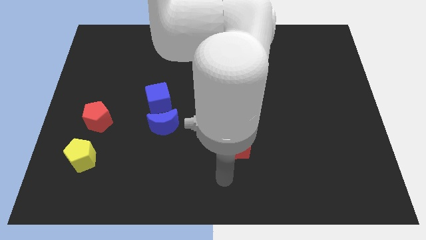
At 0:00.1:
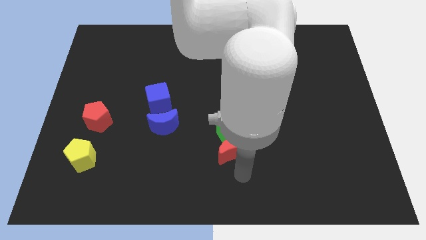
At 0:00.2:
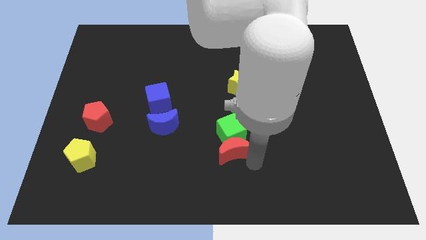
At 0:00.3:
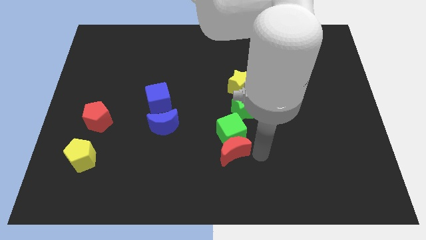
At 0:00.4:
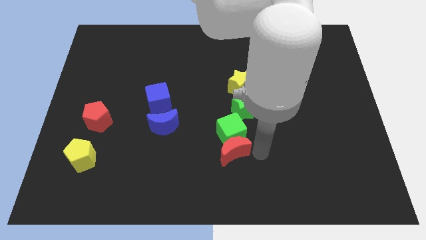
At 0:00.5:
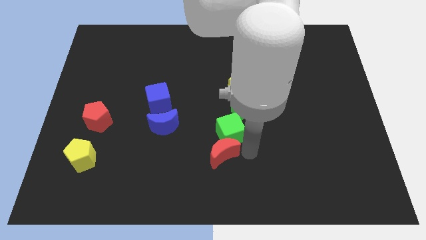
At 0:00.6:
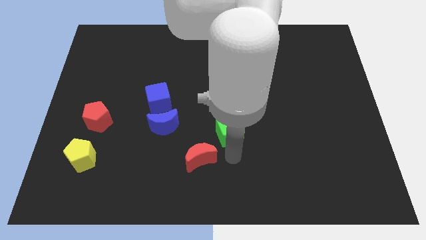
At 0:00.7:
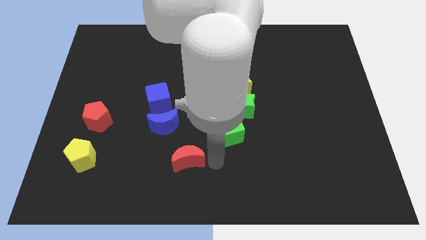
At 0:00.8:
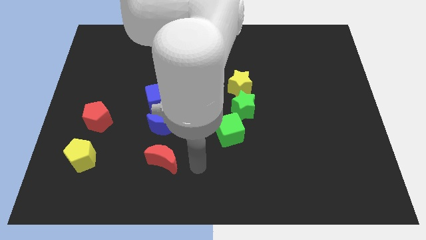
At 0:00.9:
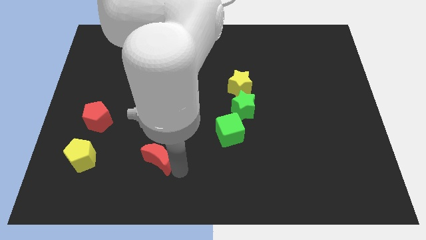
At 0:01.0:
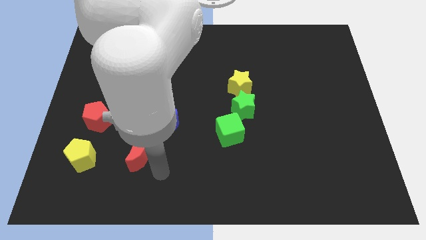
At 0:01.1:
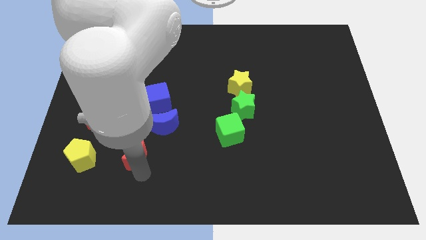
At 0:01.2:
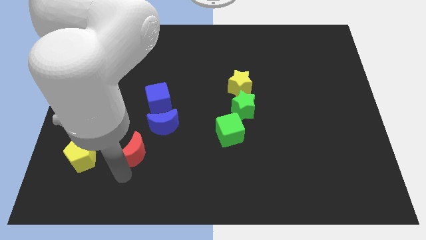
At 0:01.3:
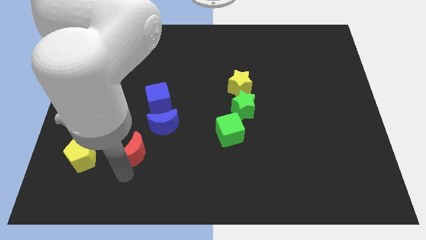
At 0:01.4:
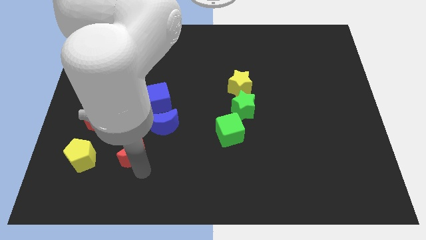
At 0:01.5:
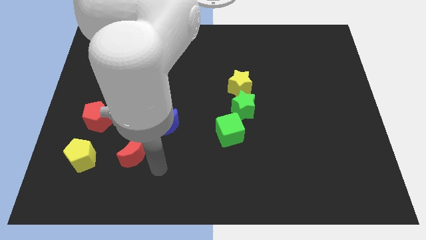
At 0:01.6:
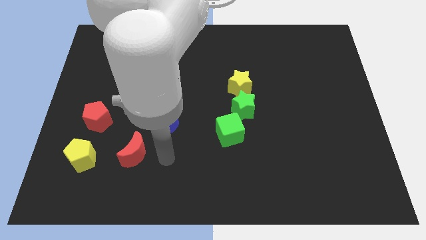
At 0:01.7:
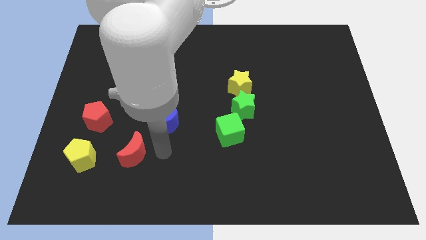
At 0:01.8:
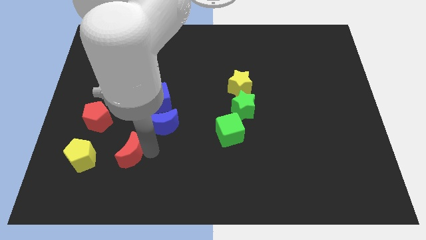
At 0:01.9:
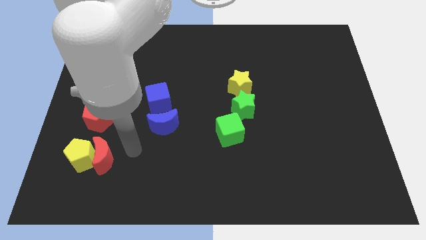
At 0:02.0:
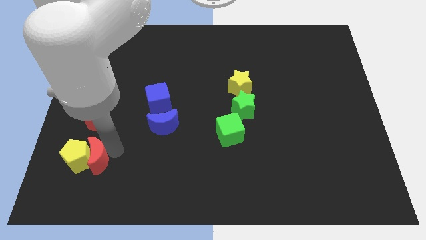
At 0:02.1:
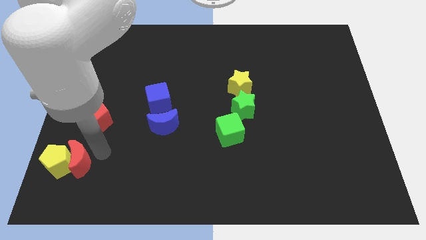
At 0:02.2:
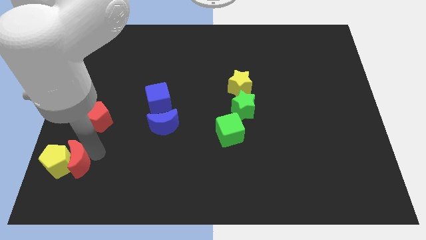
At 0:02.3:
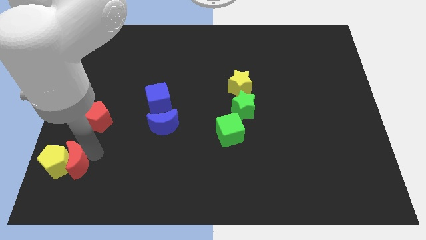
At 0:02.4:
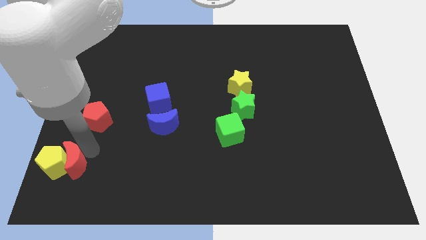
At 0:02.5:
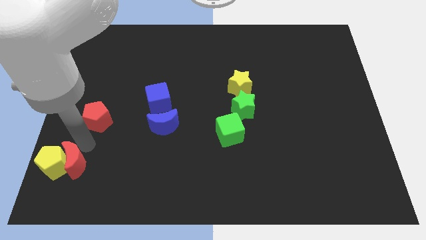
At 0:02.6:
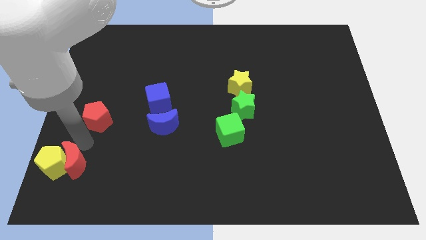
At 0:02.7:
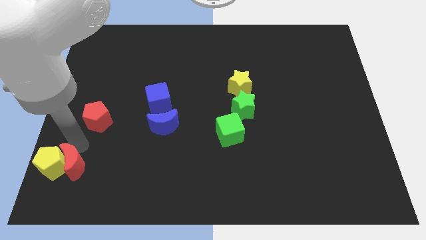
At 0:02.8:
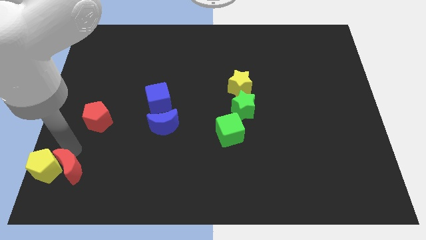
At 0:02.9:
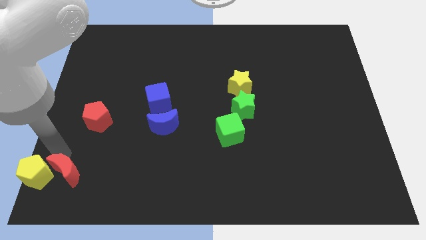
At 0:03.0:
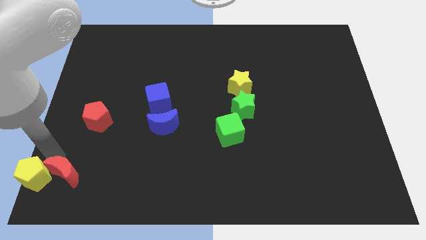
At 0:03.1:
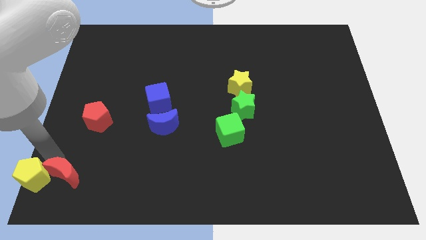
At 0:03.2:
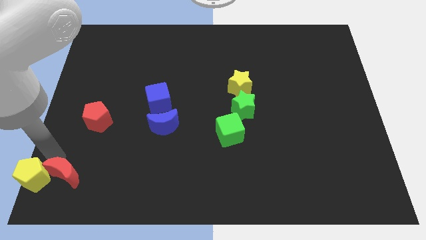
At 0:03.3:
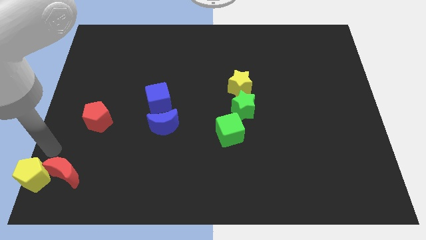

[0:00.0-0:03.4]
push the red moon into yellow pentagon

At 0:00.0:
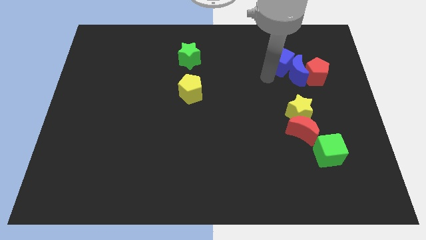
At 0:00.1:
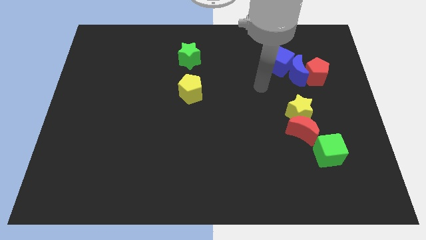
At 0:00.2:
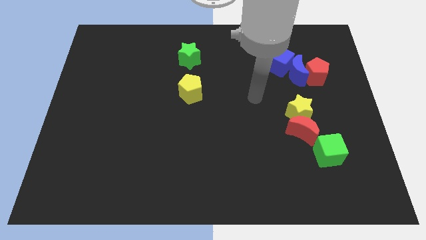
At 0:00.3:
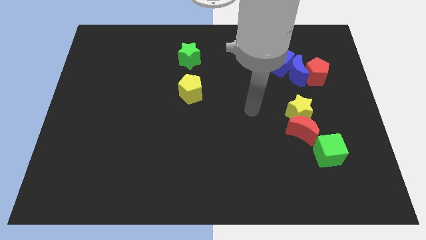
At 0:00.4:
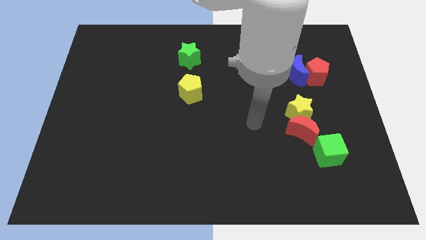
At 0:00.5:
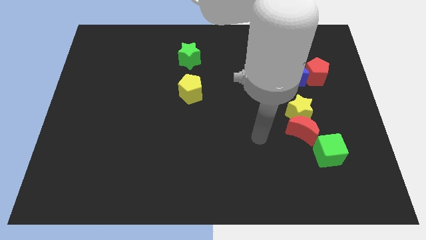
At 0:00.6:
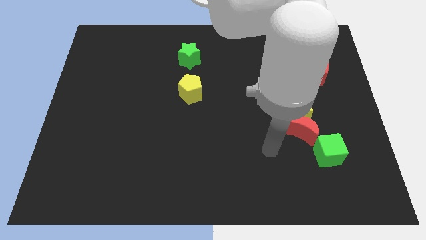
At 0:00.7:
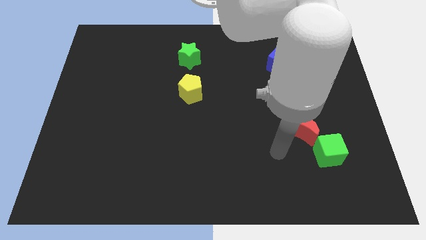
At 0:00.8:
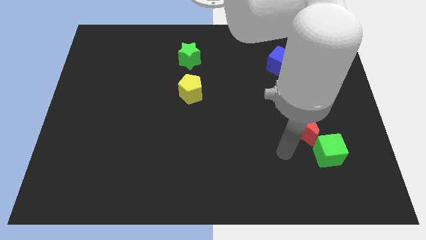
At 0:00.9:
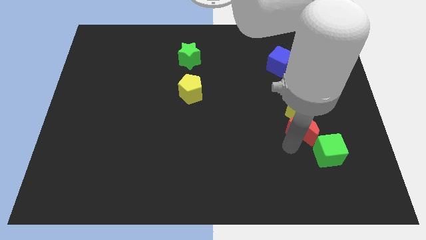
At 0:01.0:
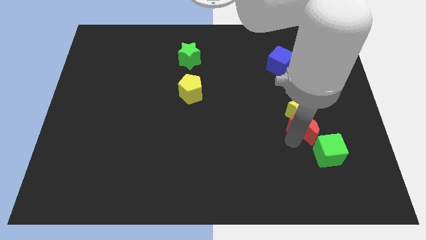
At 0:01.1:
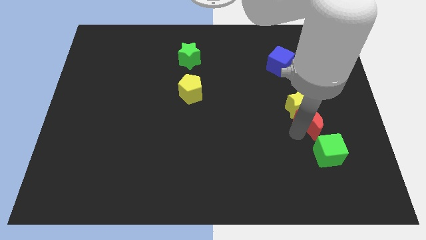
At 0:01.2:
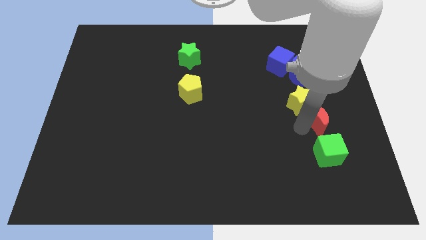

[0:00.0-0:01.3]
move the red crescent in between the green cube and yellow star

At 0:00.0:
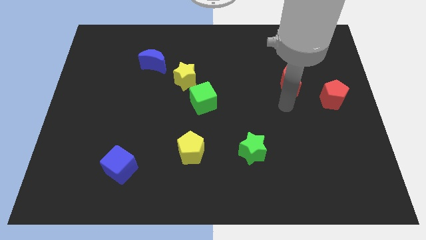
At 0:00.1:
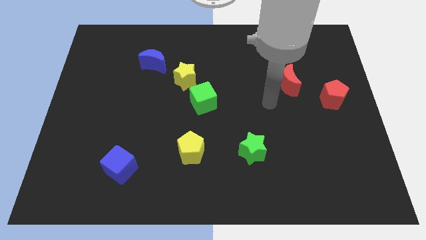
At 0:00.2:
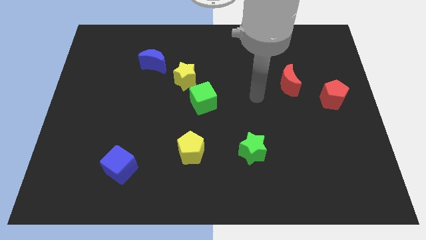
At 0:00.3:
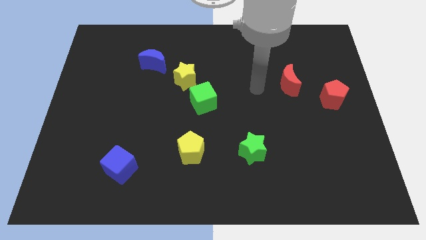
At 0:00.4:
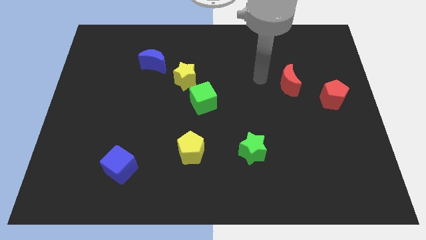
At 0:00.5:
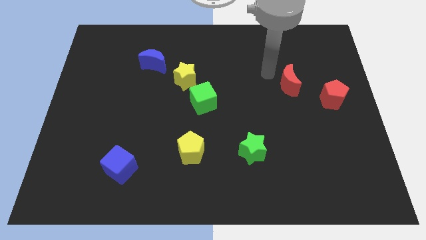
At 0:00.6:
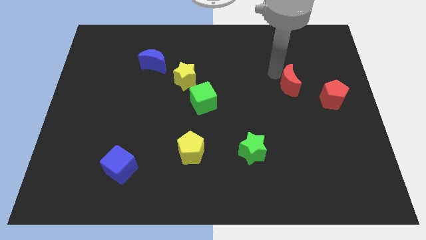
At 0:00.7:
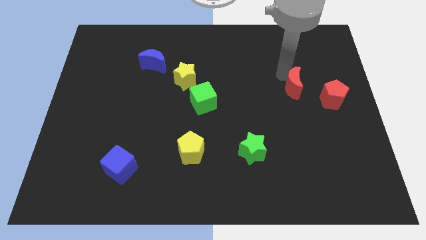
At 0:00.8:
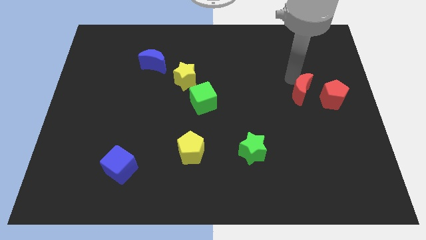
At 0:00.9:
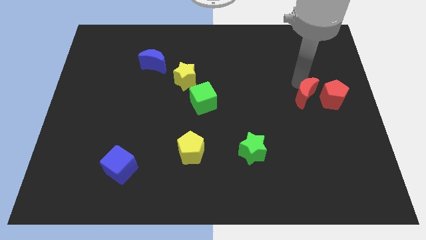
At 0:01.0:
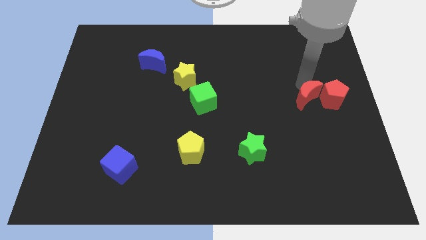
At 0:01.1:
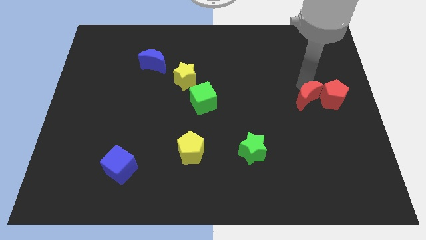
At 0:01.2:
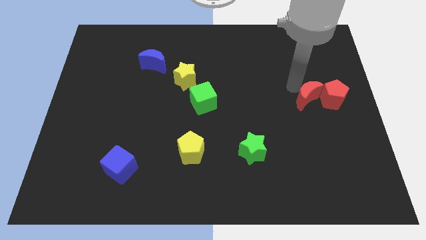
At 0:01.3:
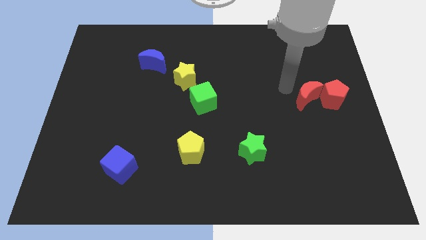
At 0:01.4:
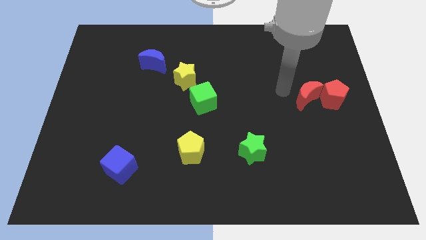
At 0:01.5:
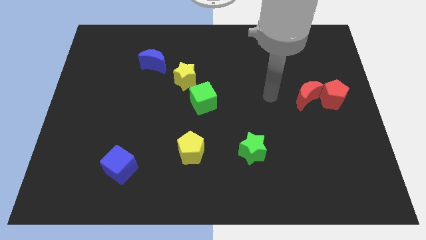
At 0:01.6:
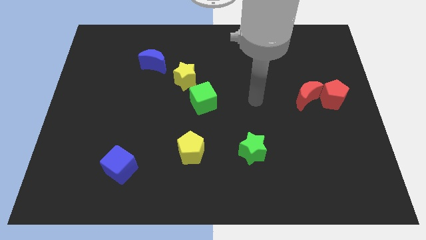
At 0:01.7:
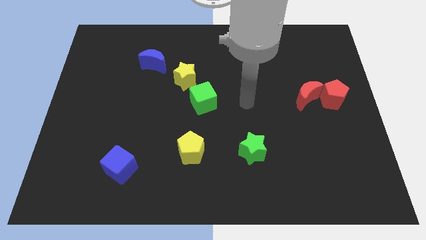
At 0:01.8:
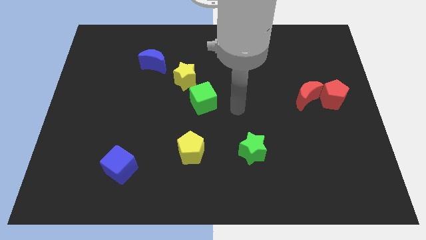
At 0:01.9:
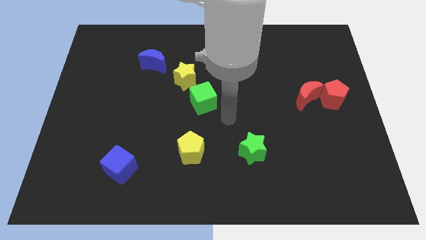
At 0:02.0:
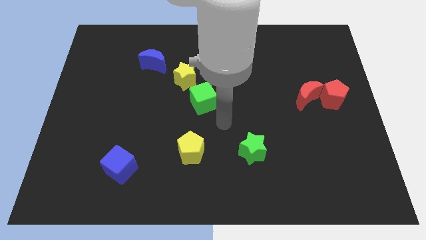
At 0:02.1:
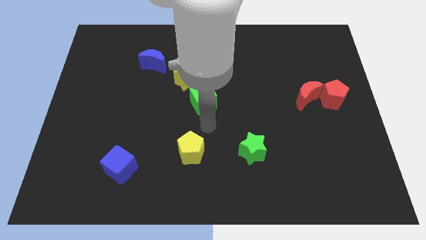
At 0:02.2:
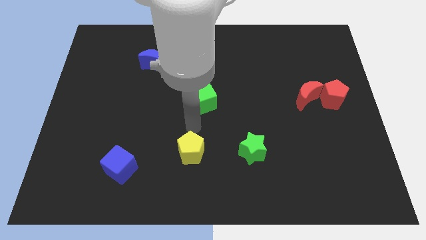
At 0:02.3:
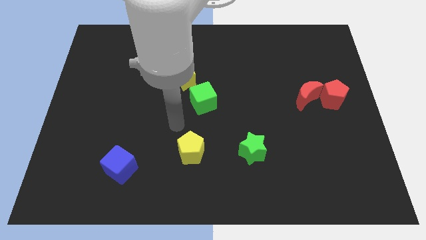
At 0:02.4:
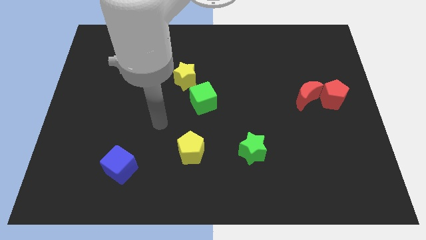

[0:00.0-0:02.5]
move your arm away from the red blocks

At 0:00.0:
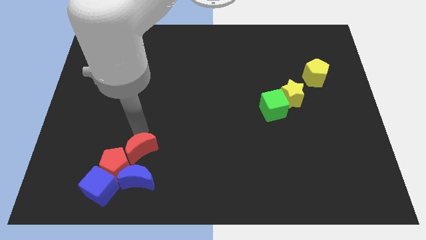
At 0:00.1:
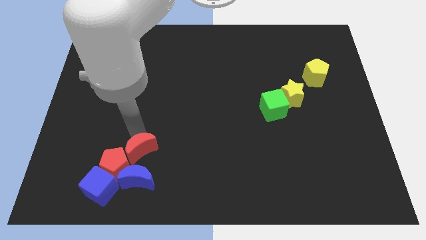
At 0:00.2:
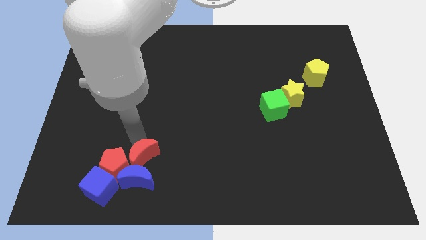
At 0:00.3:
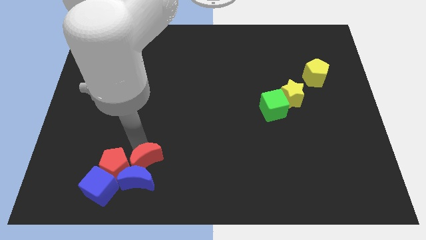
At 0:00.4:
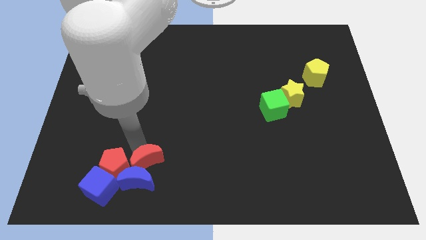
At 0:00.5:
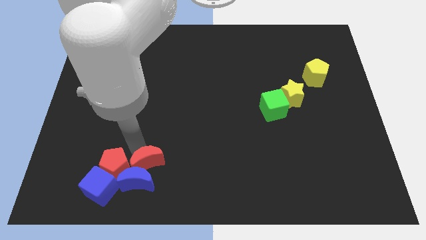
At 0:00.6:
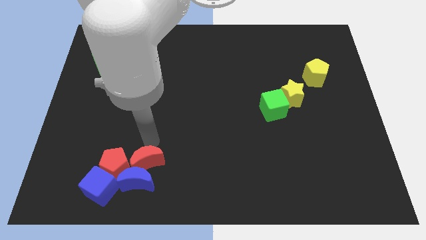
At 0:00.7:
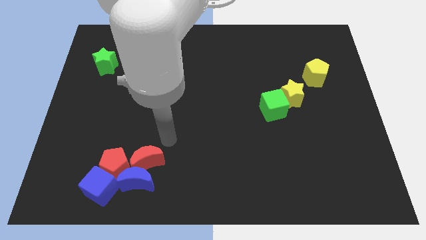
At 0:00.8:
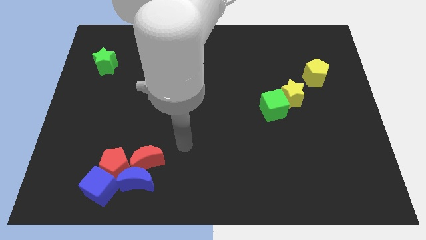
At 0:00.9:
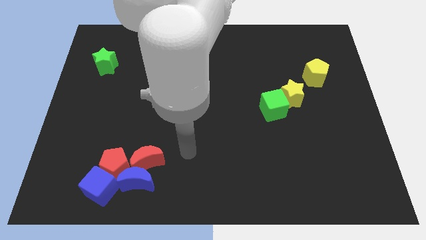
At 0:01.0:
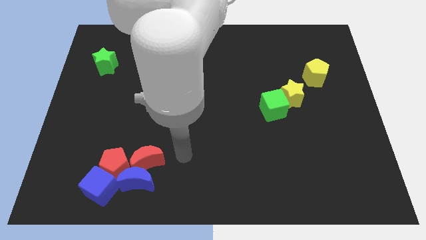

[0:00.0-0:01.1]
push red moon into blue moon

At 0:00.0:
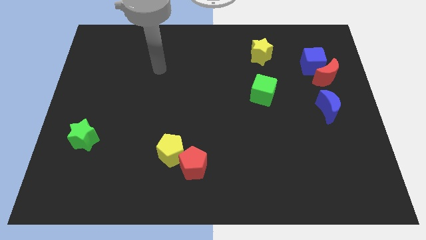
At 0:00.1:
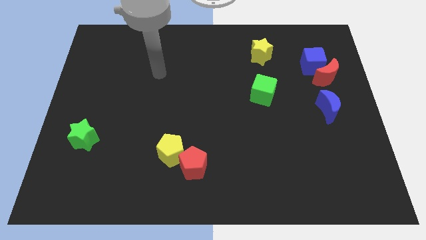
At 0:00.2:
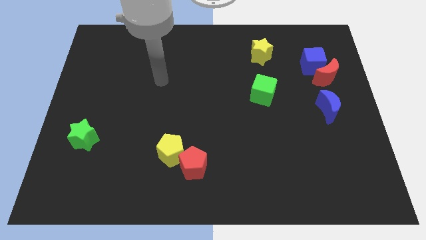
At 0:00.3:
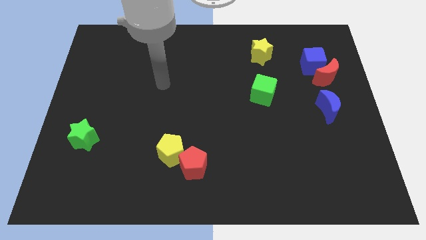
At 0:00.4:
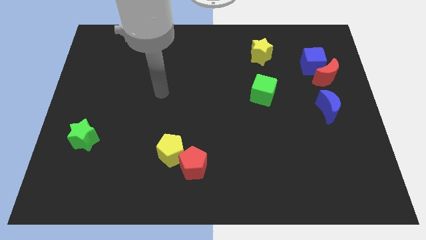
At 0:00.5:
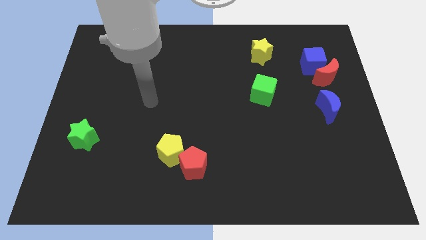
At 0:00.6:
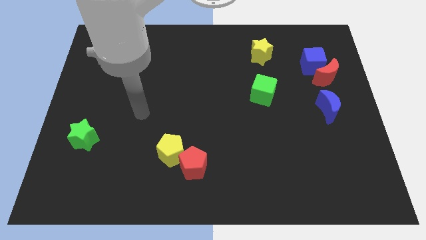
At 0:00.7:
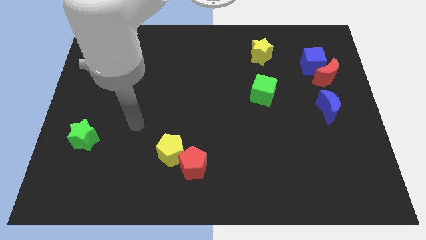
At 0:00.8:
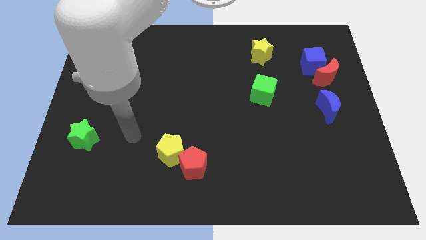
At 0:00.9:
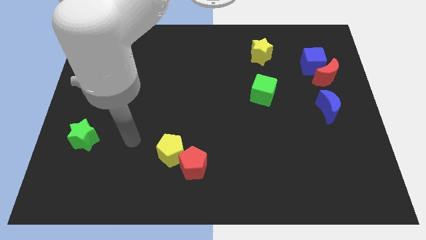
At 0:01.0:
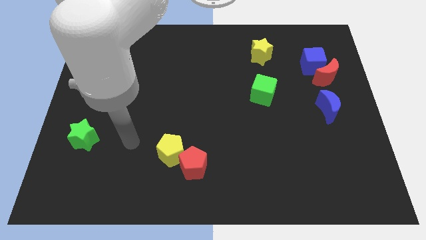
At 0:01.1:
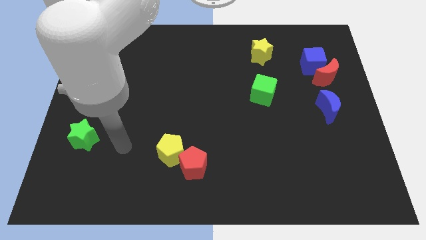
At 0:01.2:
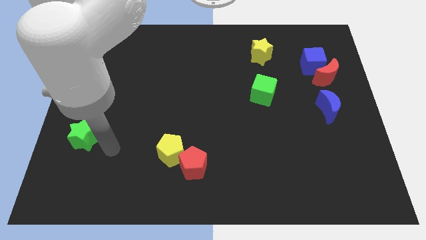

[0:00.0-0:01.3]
place arm in between green star and yellow pentagon
